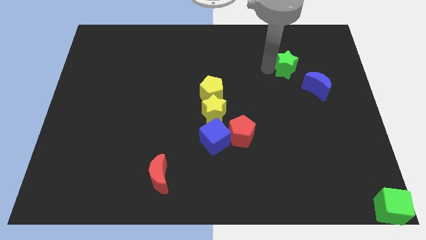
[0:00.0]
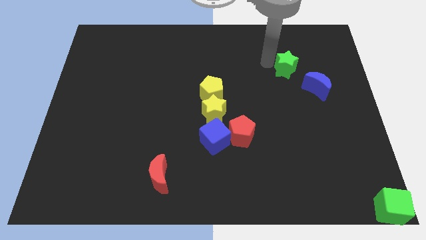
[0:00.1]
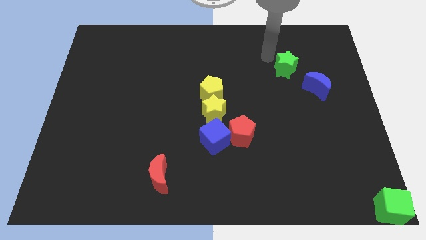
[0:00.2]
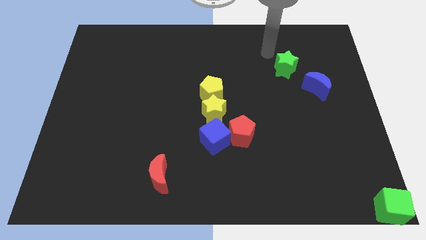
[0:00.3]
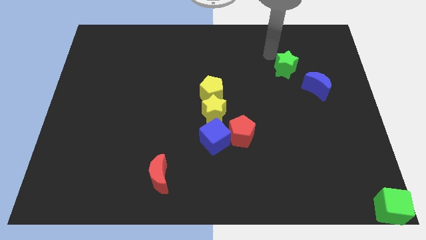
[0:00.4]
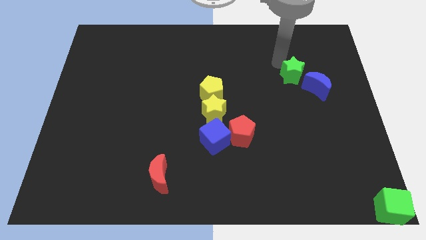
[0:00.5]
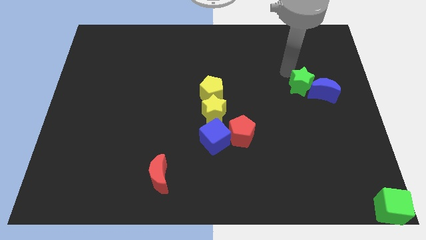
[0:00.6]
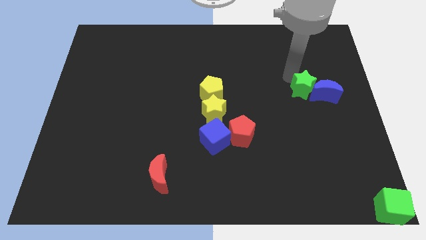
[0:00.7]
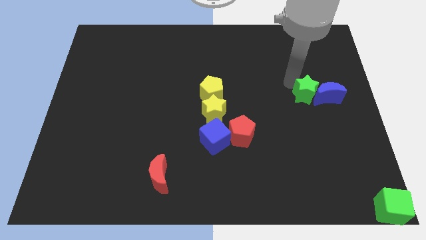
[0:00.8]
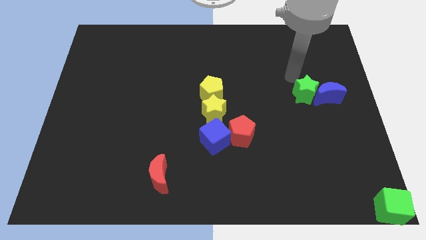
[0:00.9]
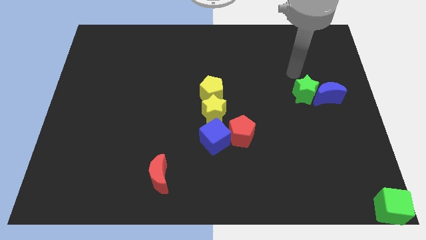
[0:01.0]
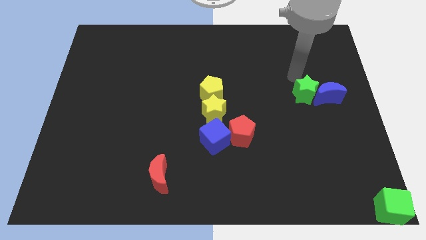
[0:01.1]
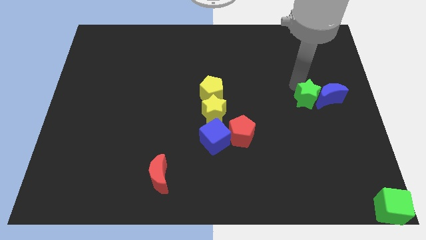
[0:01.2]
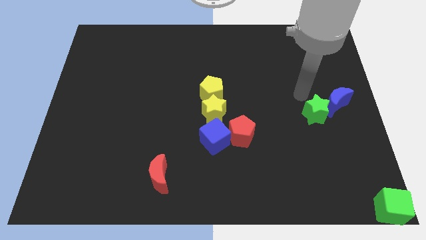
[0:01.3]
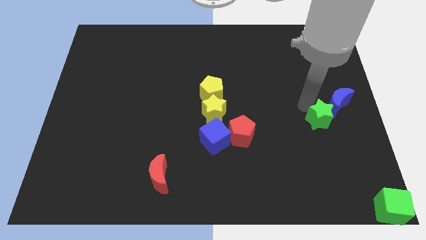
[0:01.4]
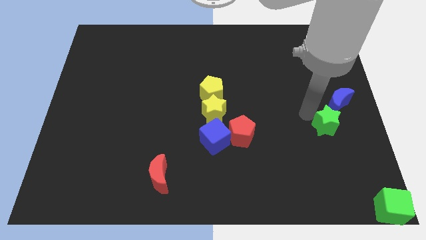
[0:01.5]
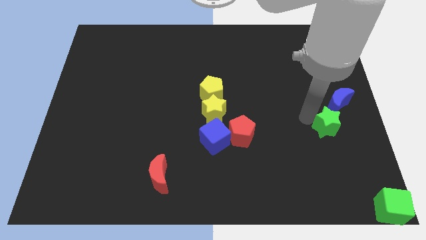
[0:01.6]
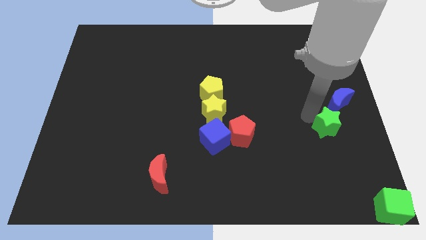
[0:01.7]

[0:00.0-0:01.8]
push the green star into the blue moon

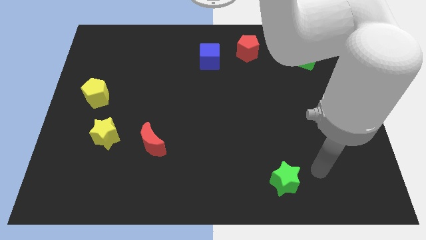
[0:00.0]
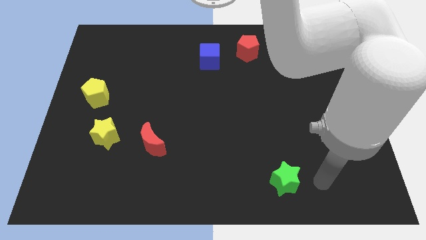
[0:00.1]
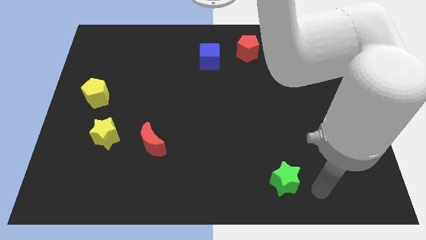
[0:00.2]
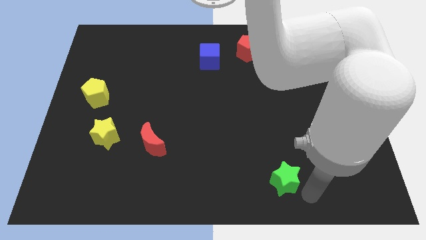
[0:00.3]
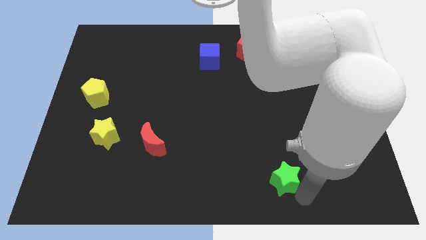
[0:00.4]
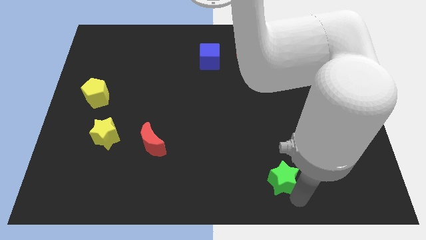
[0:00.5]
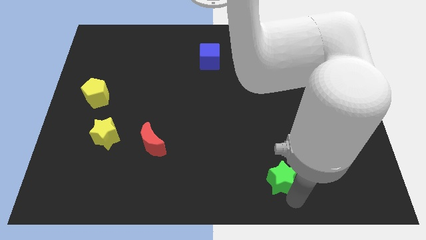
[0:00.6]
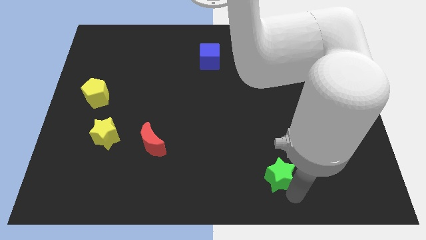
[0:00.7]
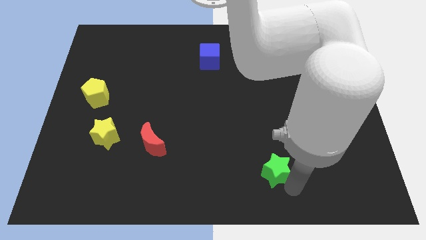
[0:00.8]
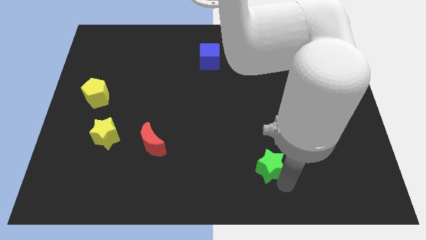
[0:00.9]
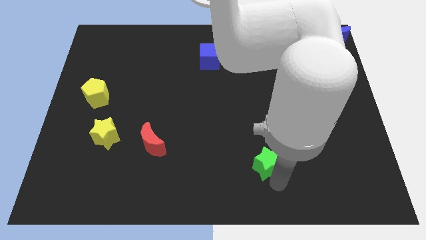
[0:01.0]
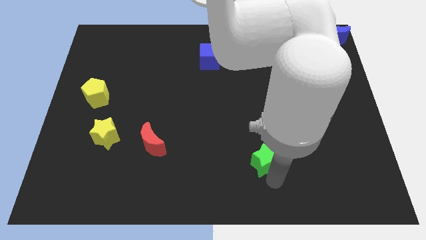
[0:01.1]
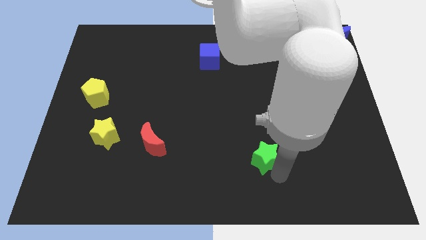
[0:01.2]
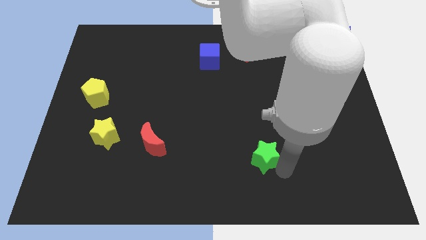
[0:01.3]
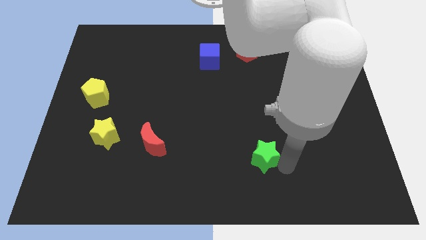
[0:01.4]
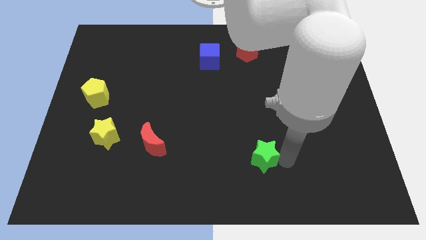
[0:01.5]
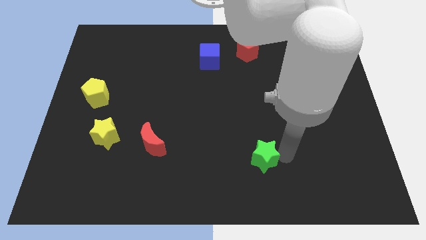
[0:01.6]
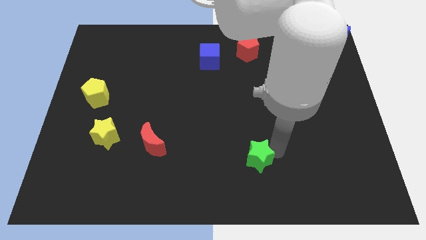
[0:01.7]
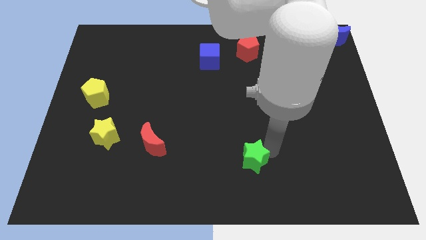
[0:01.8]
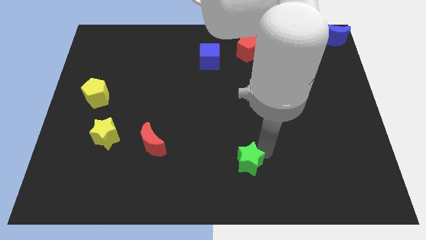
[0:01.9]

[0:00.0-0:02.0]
slightly push the green star to the left

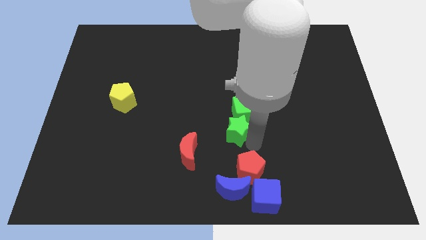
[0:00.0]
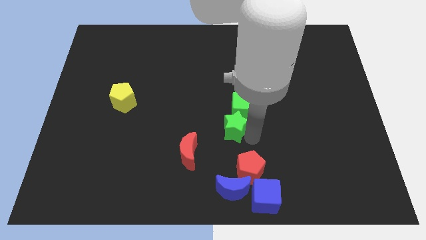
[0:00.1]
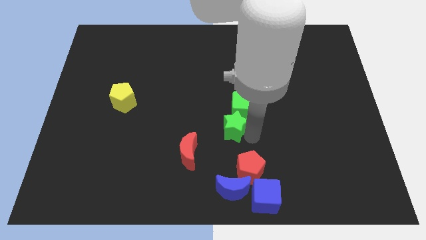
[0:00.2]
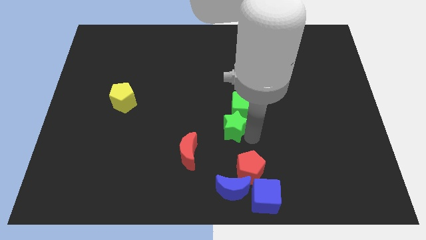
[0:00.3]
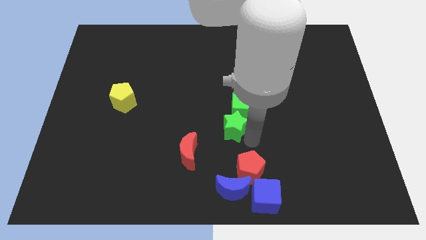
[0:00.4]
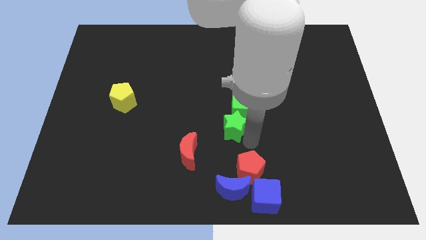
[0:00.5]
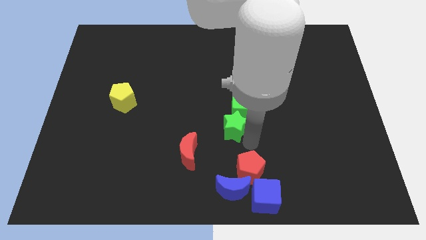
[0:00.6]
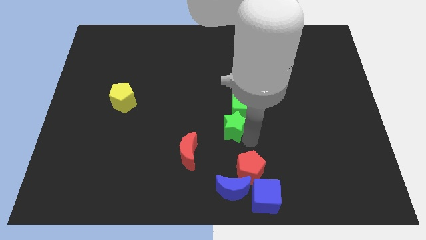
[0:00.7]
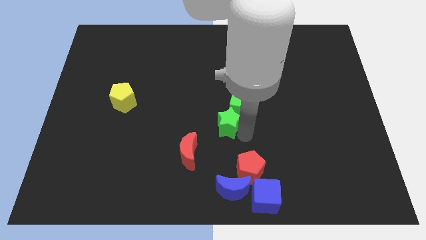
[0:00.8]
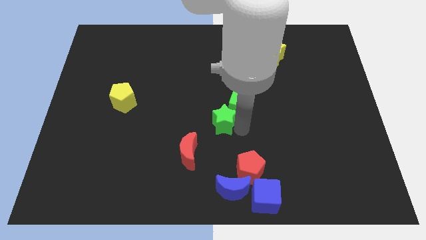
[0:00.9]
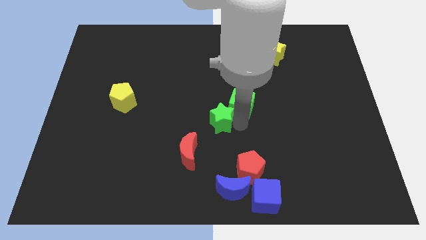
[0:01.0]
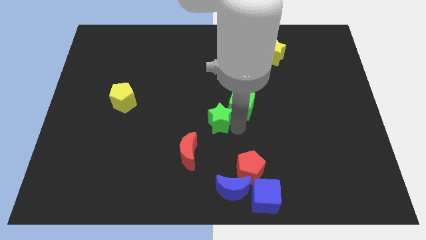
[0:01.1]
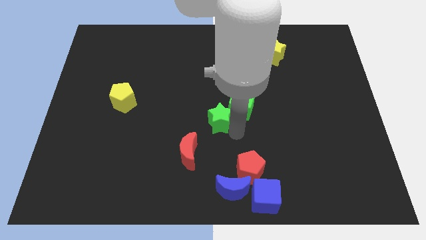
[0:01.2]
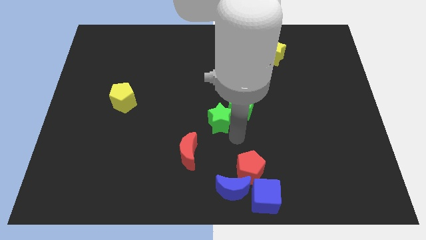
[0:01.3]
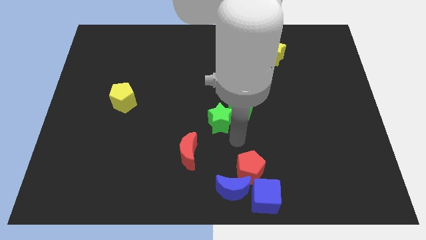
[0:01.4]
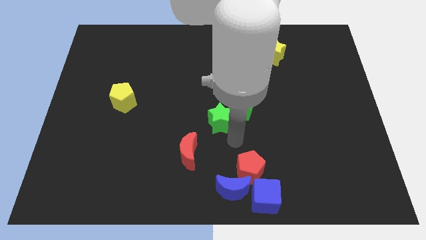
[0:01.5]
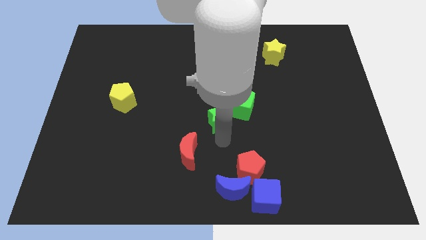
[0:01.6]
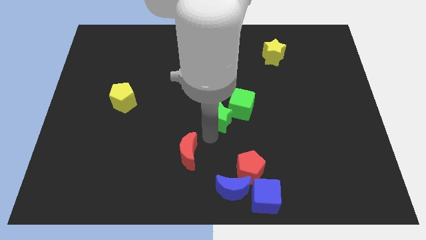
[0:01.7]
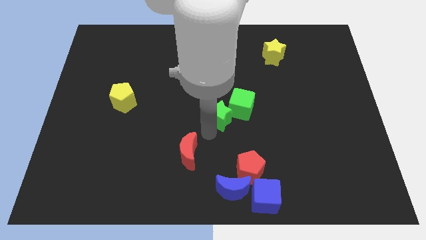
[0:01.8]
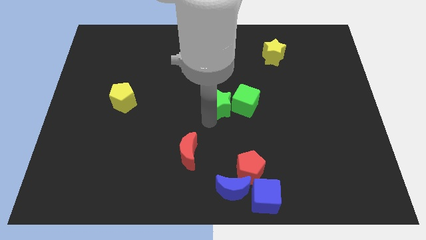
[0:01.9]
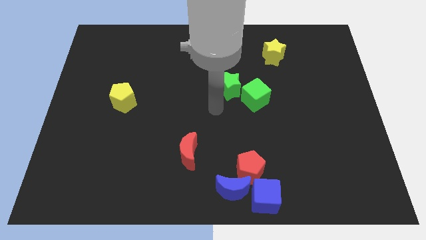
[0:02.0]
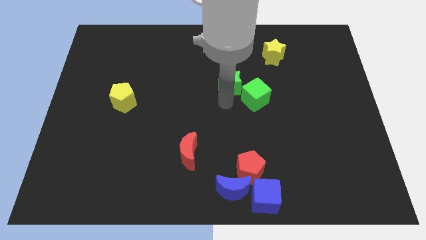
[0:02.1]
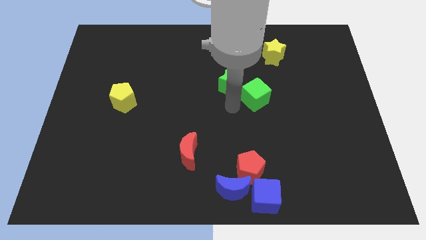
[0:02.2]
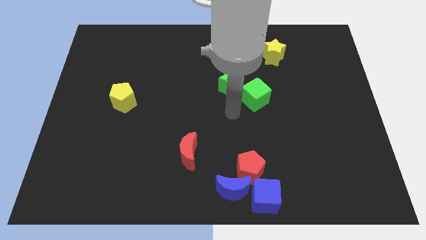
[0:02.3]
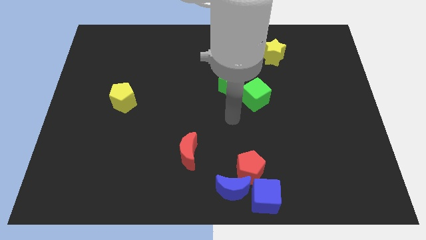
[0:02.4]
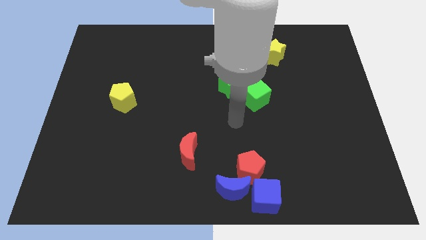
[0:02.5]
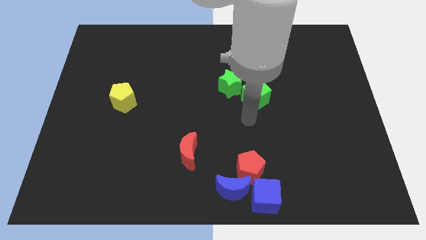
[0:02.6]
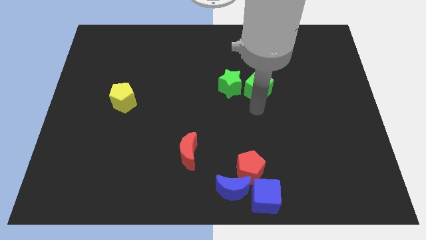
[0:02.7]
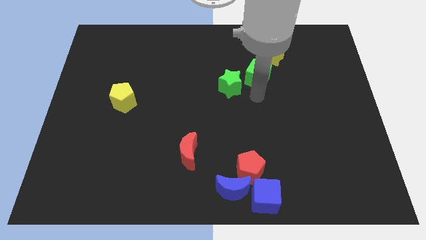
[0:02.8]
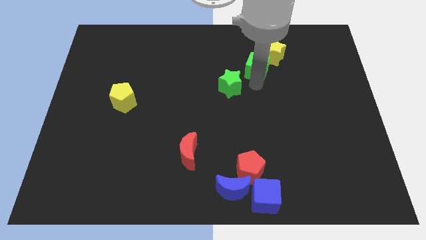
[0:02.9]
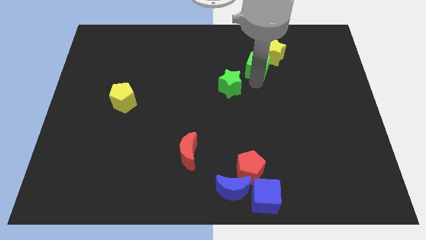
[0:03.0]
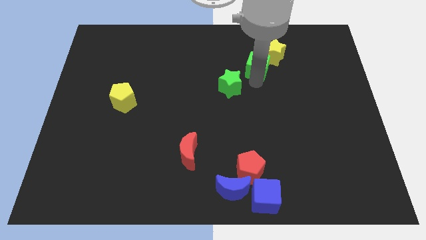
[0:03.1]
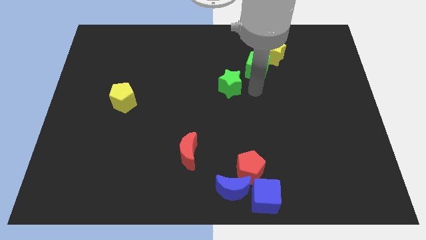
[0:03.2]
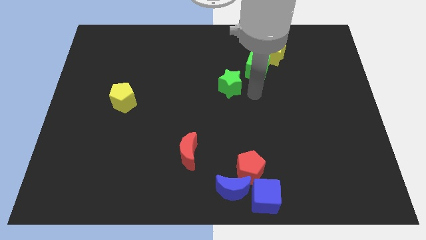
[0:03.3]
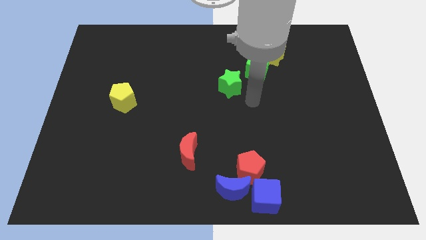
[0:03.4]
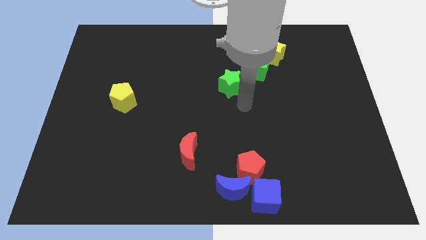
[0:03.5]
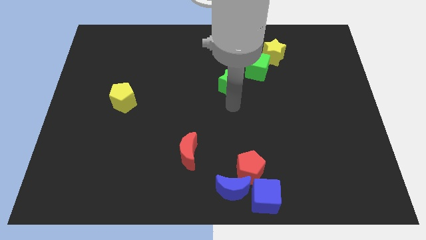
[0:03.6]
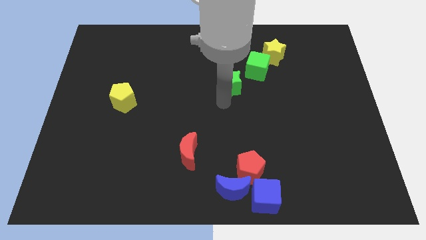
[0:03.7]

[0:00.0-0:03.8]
place the green cube and green star diagonal to the bottom left of the yellow star

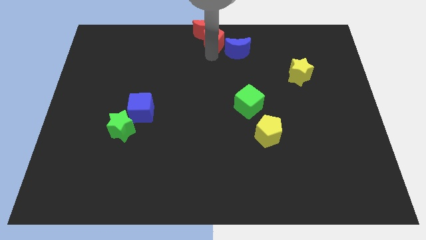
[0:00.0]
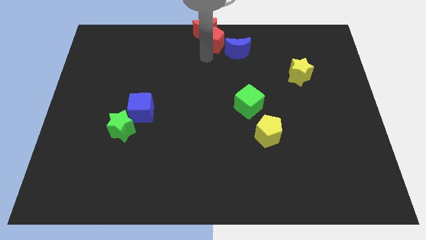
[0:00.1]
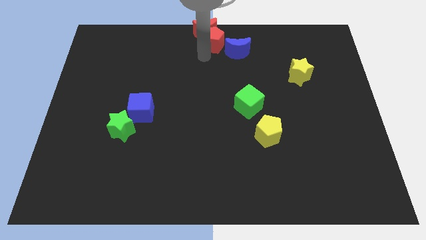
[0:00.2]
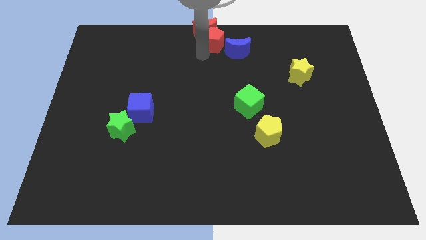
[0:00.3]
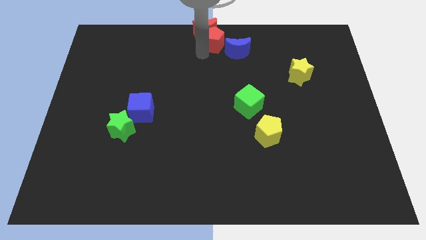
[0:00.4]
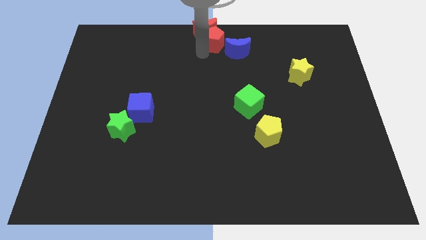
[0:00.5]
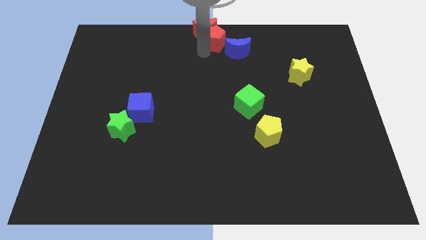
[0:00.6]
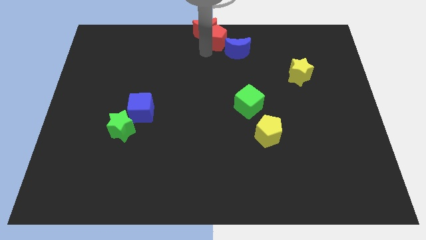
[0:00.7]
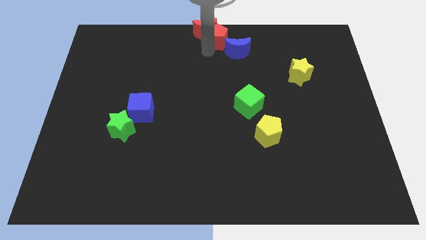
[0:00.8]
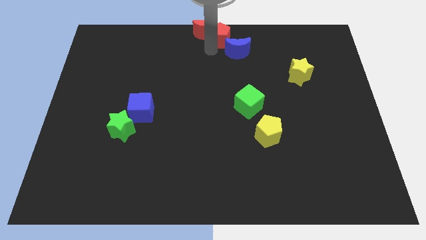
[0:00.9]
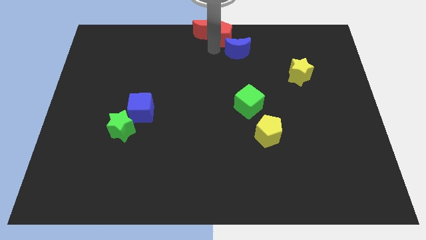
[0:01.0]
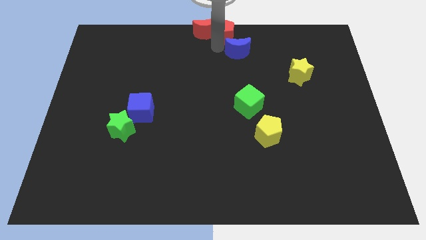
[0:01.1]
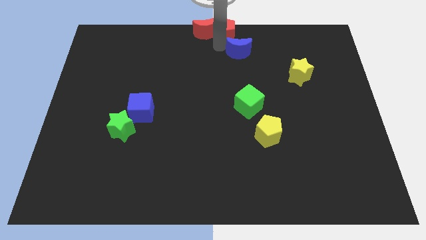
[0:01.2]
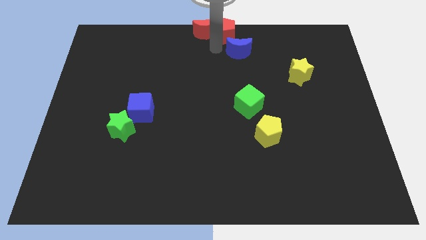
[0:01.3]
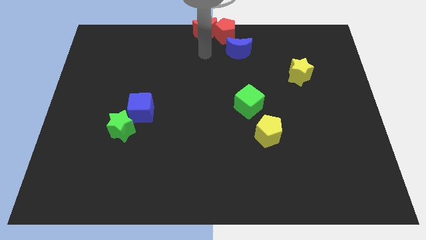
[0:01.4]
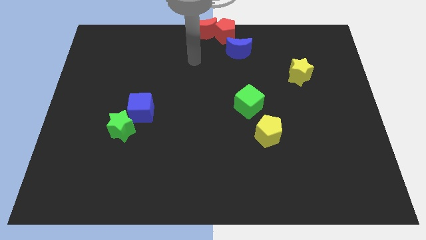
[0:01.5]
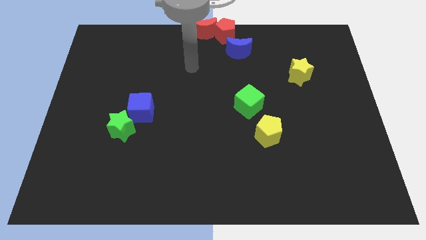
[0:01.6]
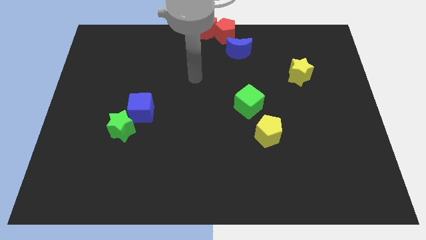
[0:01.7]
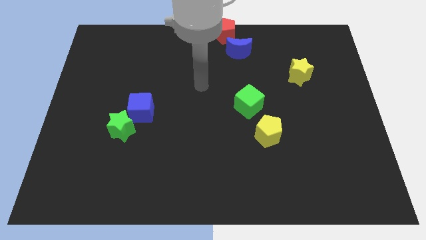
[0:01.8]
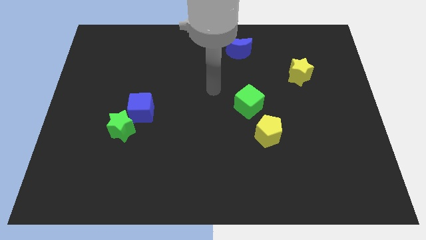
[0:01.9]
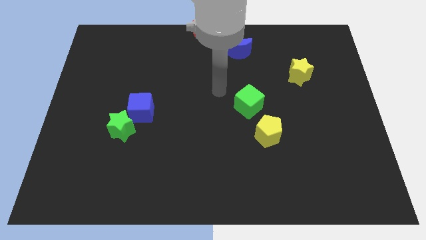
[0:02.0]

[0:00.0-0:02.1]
push the red pentagon towards the top center of the board
